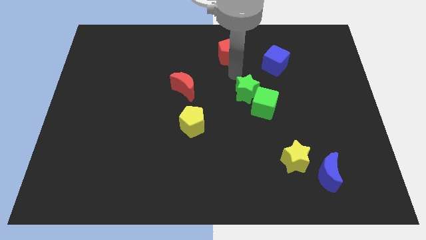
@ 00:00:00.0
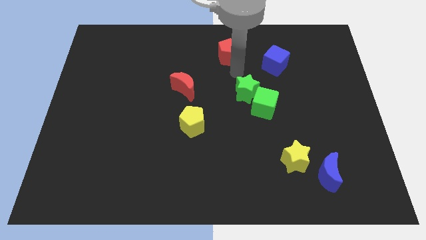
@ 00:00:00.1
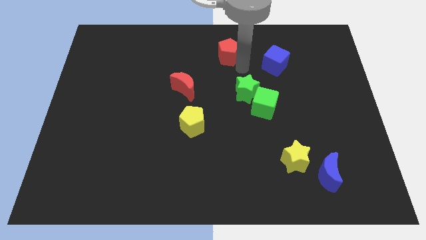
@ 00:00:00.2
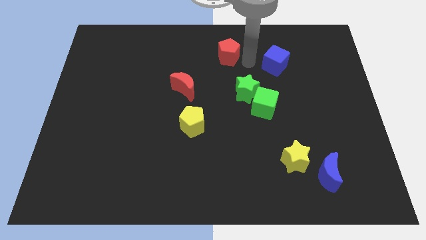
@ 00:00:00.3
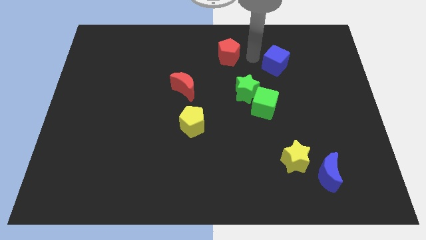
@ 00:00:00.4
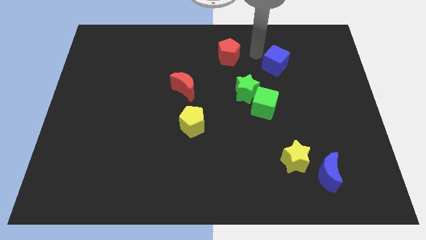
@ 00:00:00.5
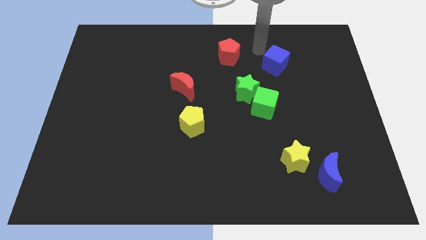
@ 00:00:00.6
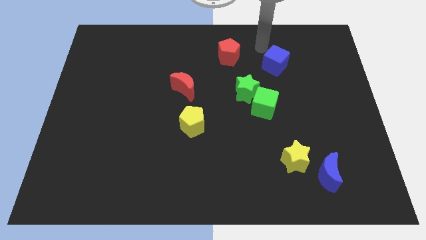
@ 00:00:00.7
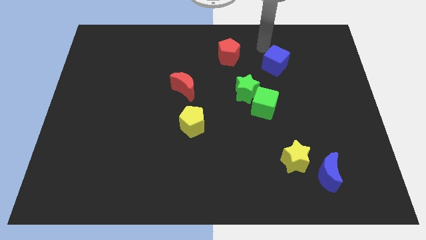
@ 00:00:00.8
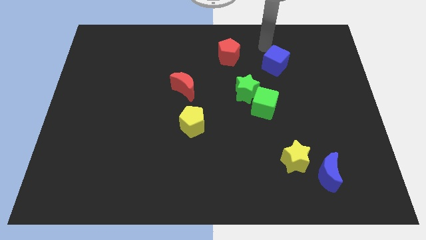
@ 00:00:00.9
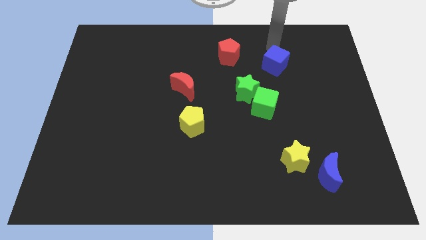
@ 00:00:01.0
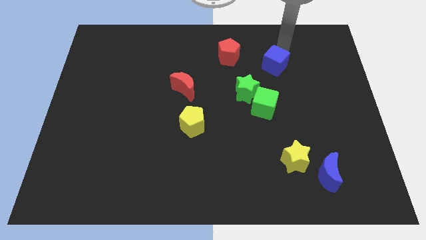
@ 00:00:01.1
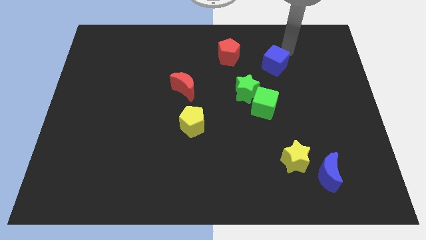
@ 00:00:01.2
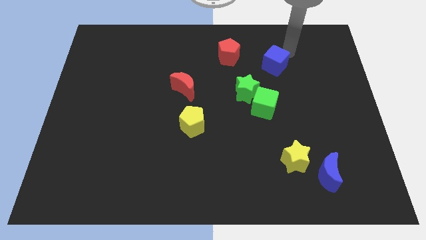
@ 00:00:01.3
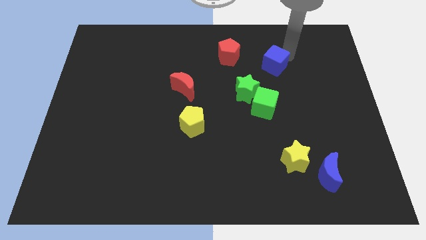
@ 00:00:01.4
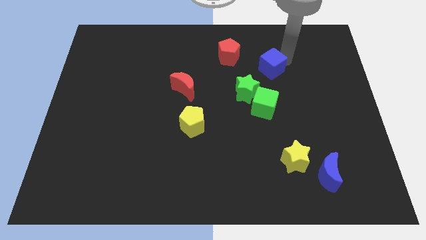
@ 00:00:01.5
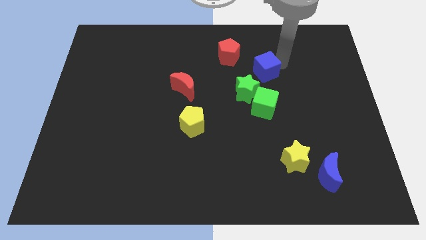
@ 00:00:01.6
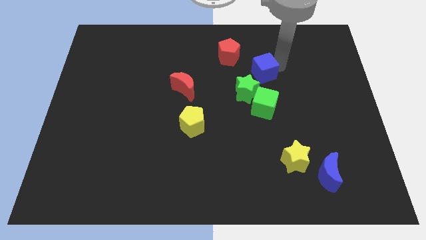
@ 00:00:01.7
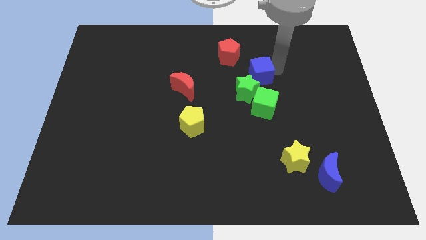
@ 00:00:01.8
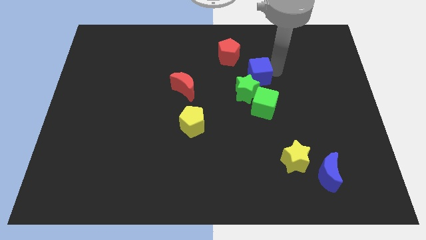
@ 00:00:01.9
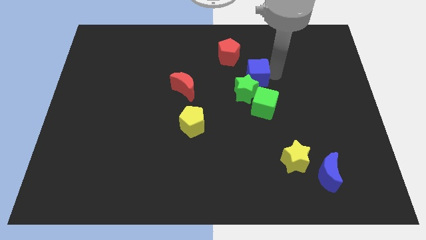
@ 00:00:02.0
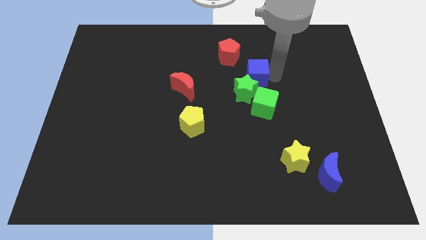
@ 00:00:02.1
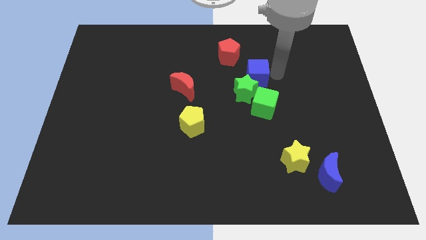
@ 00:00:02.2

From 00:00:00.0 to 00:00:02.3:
move the blue cube to the top side of the green star

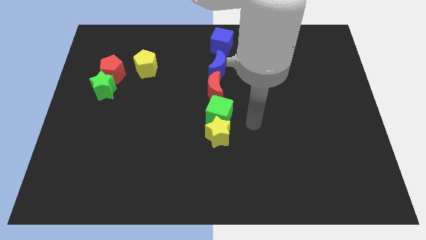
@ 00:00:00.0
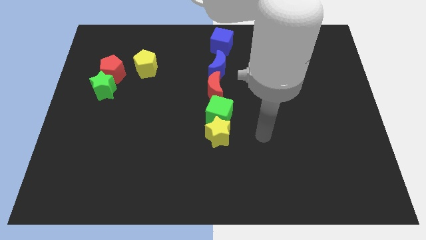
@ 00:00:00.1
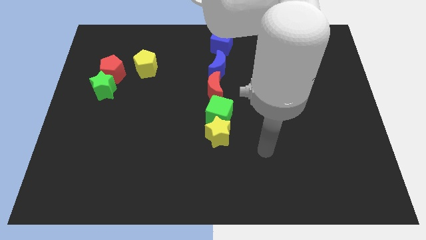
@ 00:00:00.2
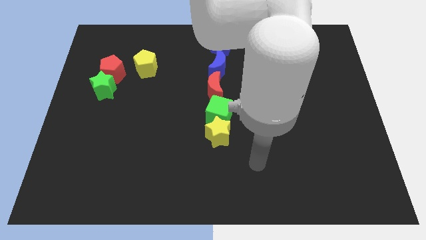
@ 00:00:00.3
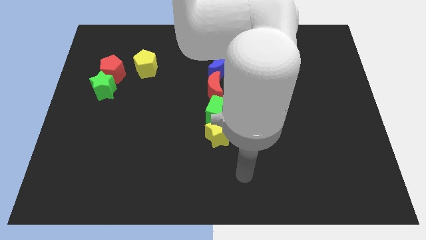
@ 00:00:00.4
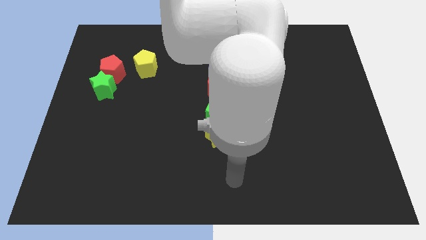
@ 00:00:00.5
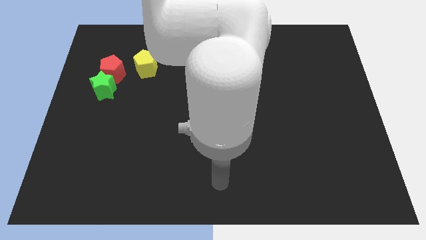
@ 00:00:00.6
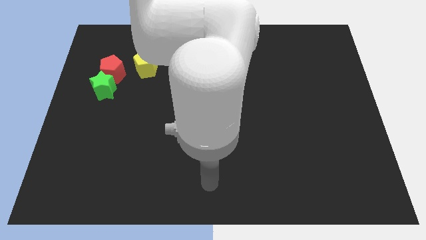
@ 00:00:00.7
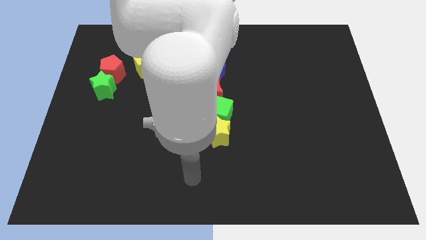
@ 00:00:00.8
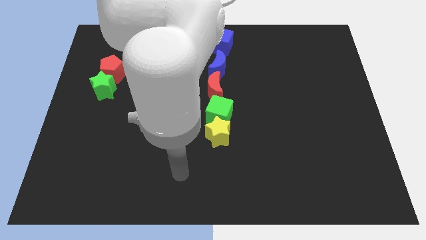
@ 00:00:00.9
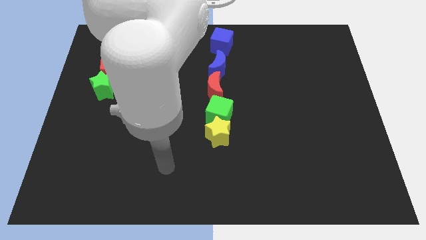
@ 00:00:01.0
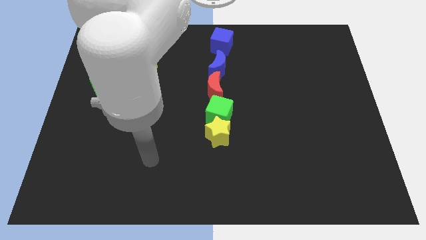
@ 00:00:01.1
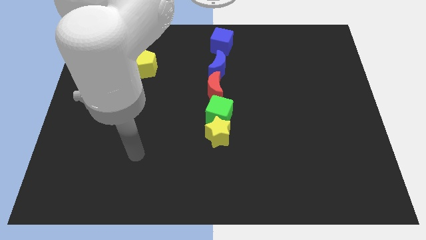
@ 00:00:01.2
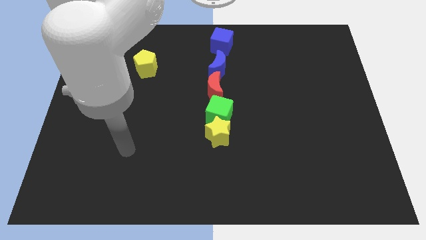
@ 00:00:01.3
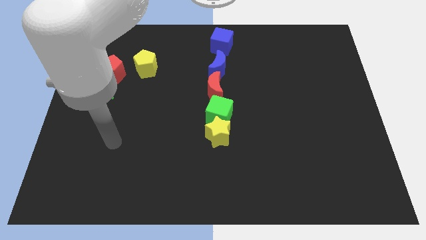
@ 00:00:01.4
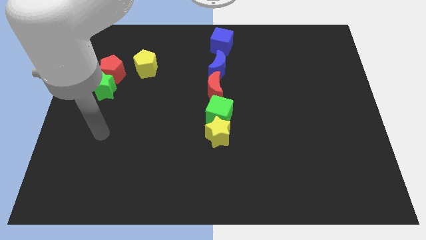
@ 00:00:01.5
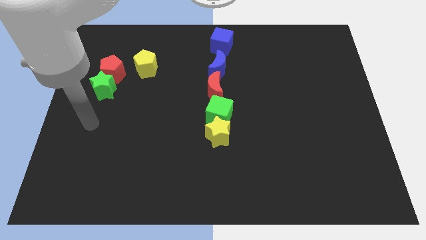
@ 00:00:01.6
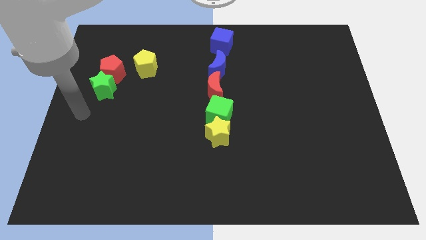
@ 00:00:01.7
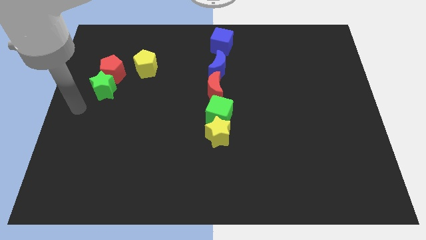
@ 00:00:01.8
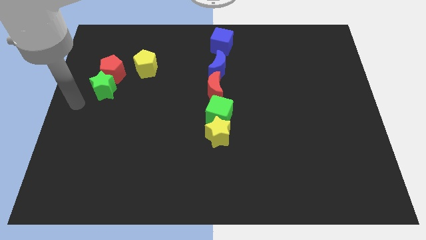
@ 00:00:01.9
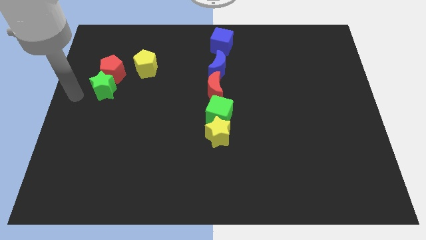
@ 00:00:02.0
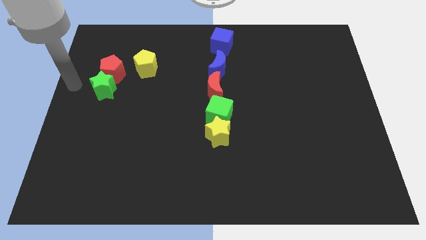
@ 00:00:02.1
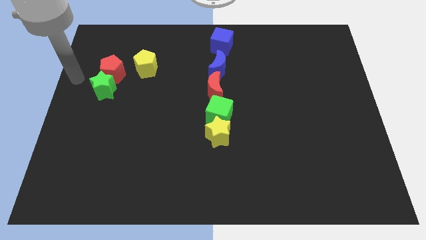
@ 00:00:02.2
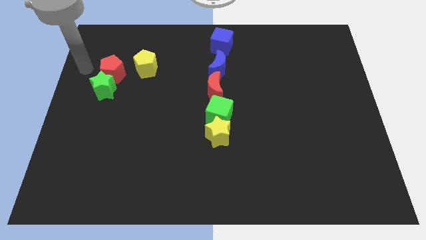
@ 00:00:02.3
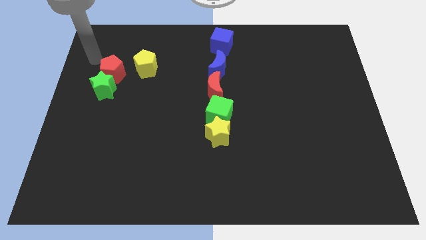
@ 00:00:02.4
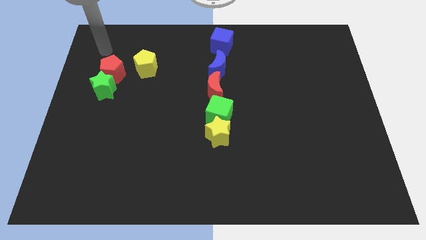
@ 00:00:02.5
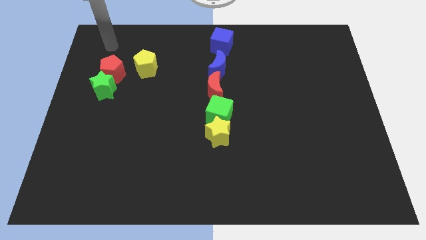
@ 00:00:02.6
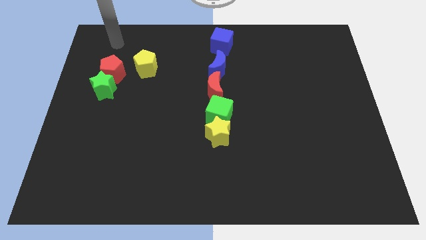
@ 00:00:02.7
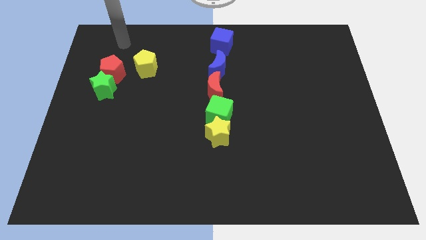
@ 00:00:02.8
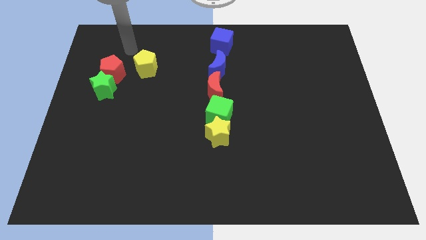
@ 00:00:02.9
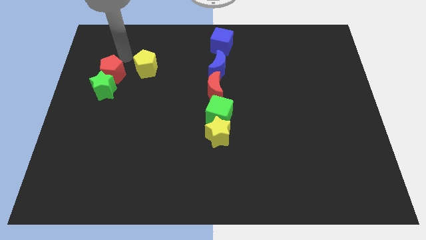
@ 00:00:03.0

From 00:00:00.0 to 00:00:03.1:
point the arm above the red pentagon

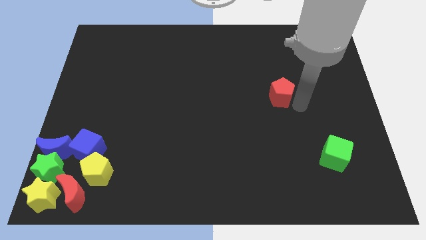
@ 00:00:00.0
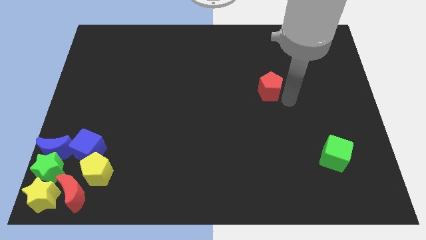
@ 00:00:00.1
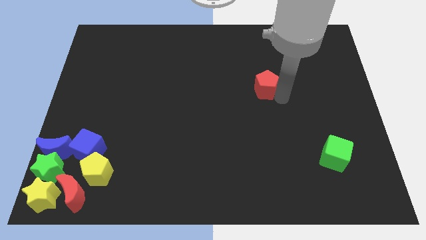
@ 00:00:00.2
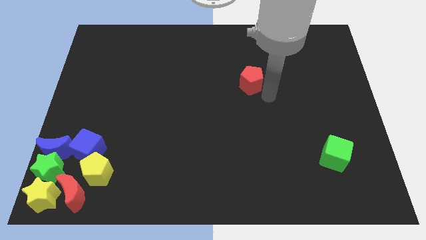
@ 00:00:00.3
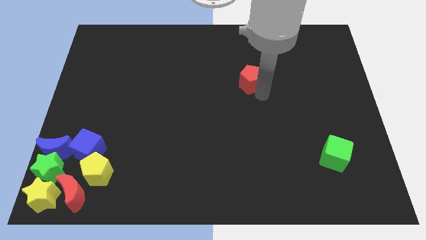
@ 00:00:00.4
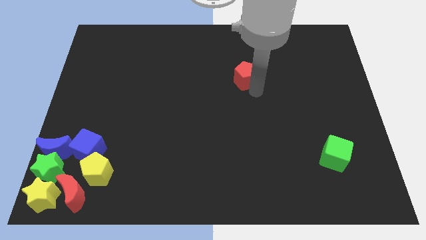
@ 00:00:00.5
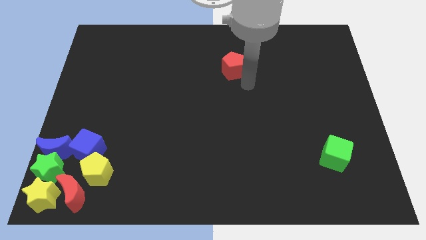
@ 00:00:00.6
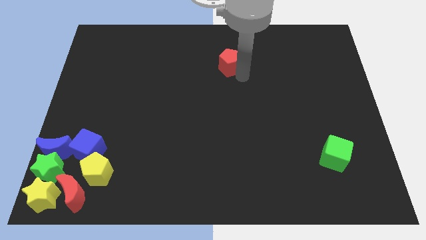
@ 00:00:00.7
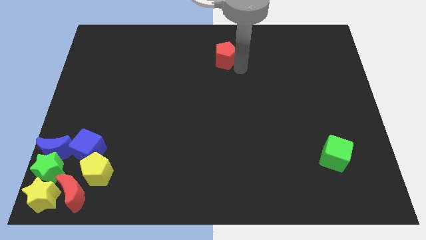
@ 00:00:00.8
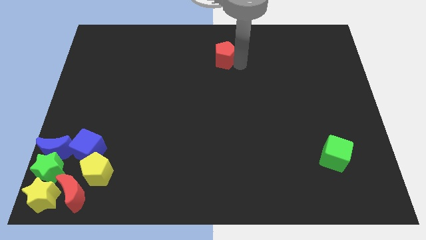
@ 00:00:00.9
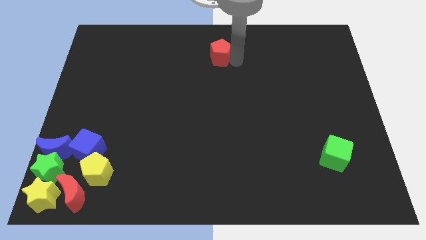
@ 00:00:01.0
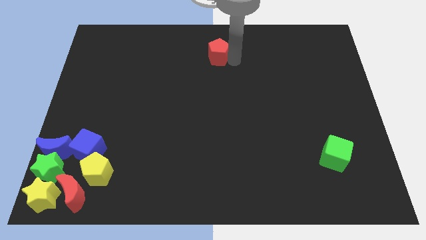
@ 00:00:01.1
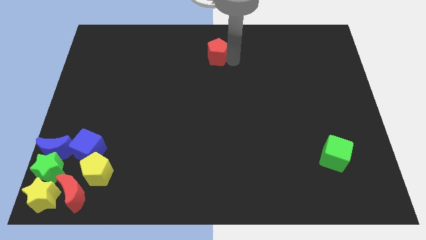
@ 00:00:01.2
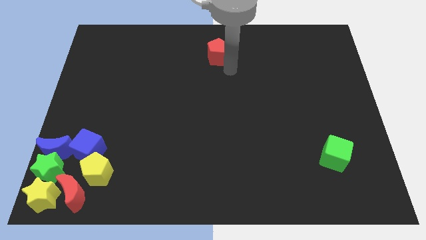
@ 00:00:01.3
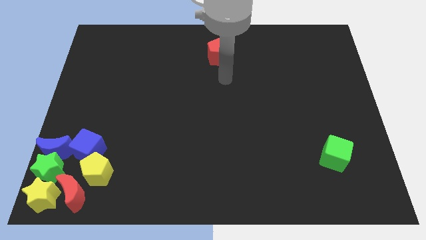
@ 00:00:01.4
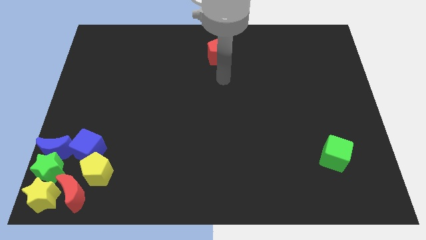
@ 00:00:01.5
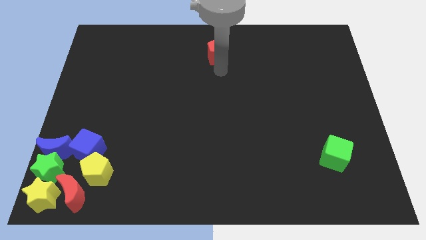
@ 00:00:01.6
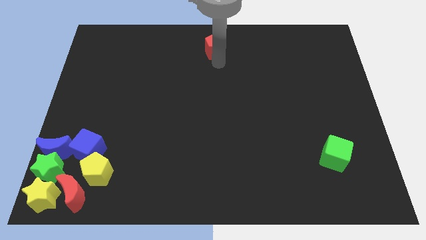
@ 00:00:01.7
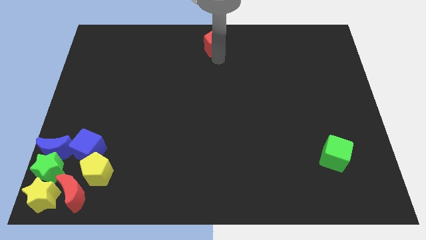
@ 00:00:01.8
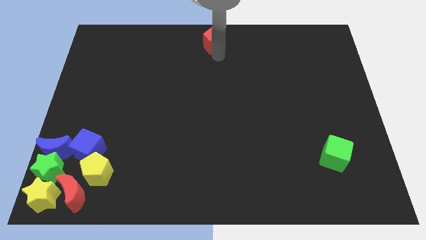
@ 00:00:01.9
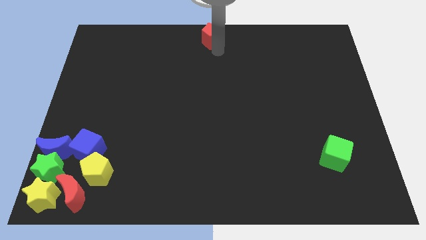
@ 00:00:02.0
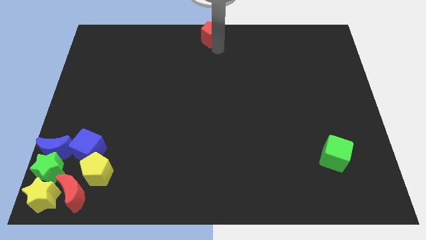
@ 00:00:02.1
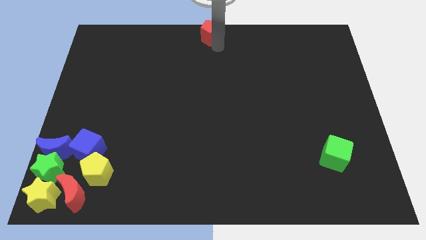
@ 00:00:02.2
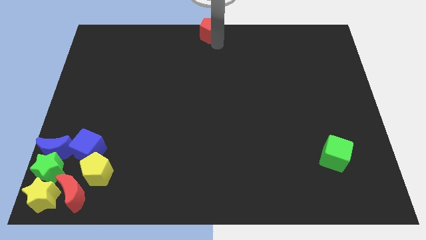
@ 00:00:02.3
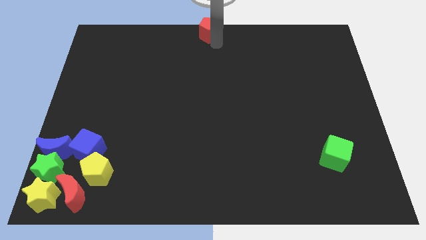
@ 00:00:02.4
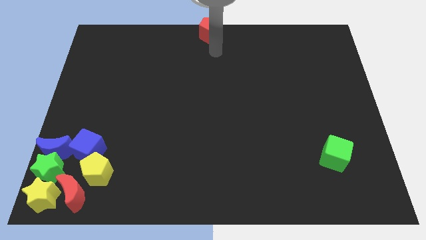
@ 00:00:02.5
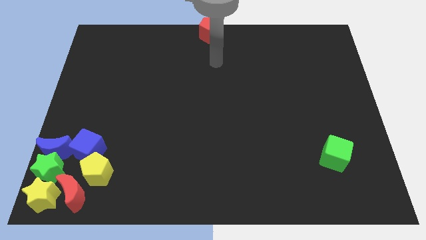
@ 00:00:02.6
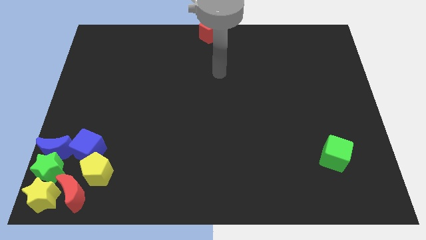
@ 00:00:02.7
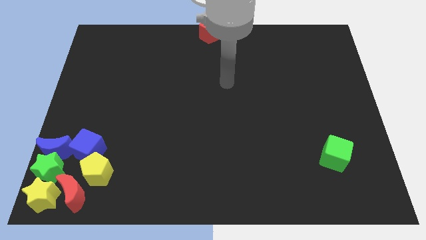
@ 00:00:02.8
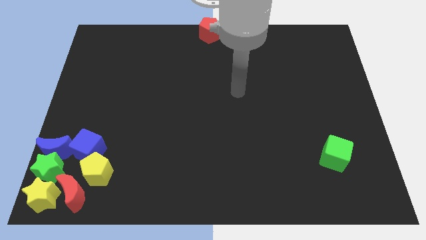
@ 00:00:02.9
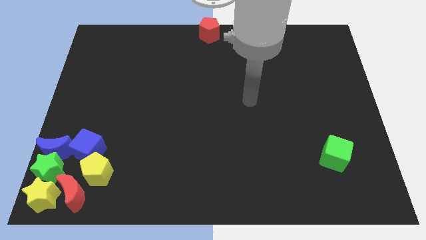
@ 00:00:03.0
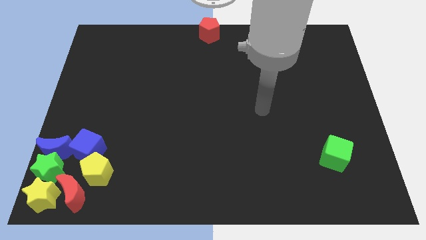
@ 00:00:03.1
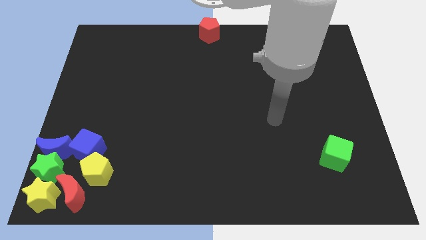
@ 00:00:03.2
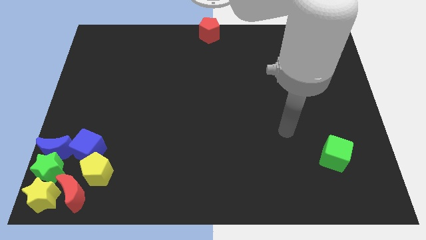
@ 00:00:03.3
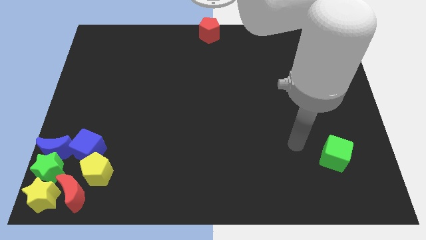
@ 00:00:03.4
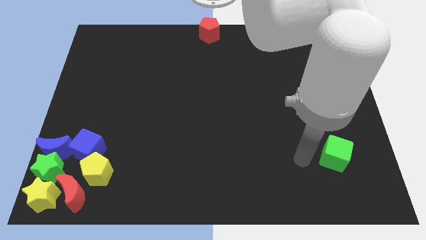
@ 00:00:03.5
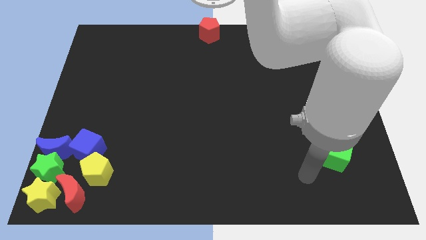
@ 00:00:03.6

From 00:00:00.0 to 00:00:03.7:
place the red pentagon at the top center of the board
